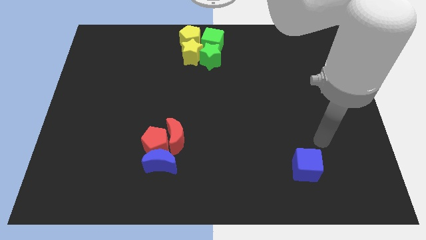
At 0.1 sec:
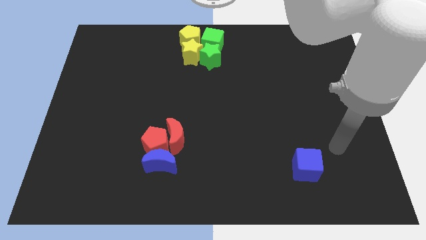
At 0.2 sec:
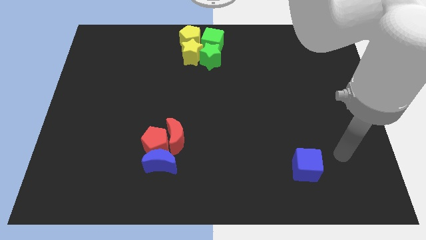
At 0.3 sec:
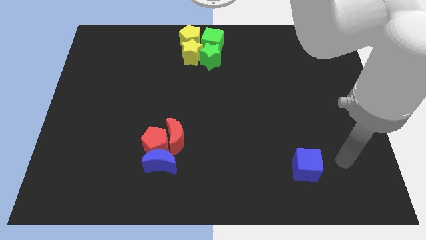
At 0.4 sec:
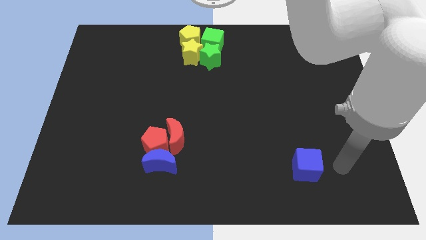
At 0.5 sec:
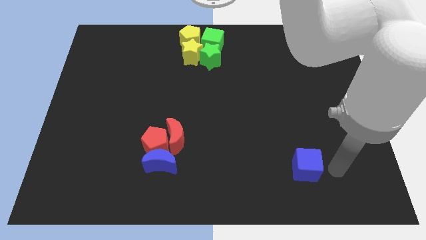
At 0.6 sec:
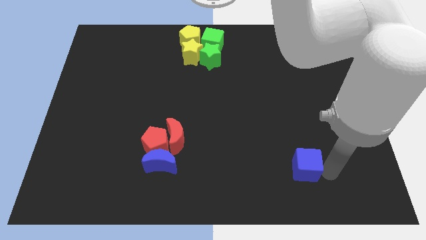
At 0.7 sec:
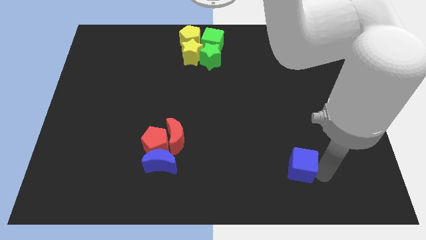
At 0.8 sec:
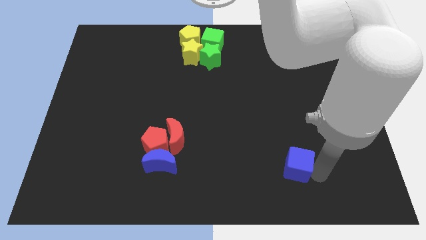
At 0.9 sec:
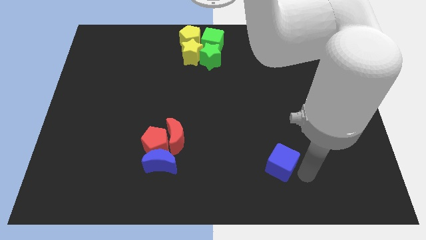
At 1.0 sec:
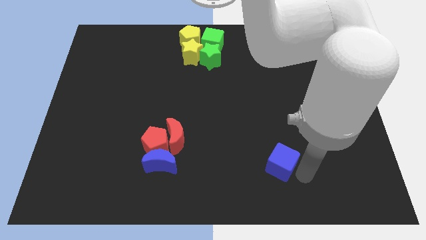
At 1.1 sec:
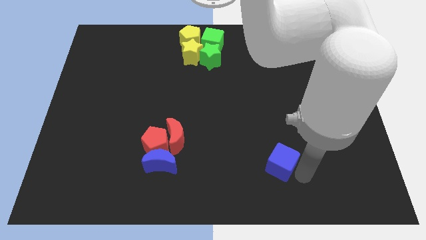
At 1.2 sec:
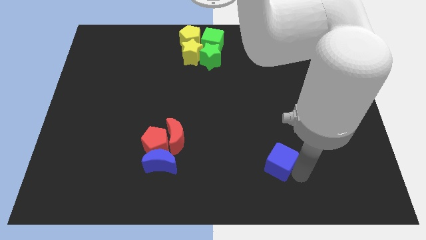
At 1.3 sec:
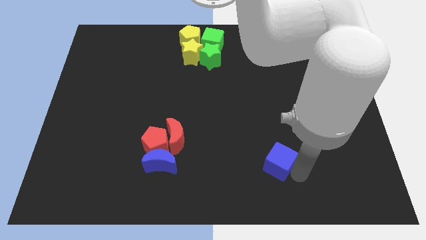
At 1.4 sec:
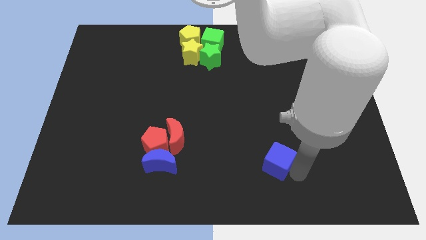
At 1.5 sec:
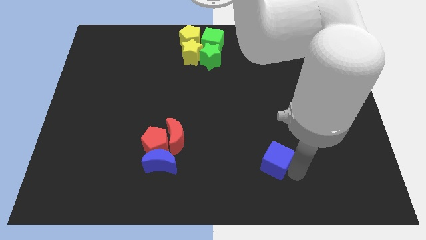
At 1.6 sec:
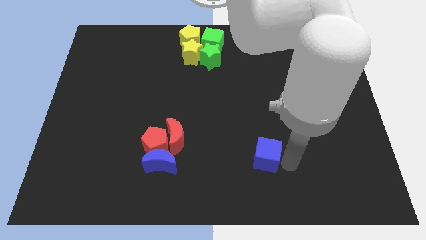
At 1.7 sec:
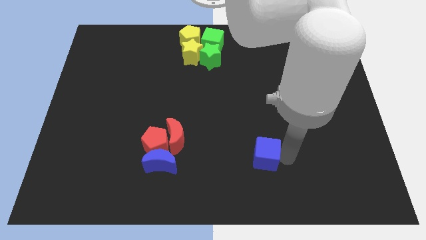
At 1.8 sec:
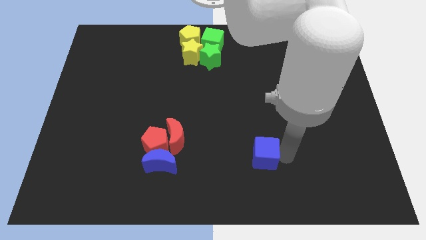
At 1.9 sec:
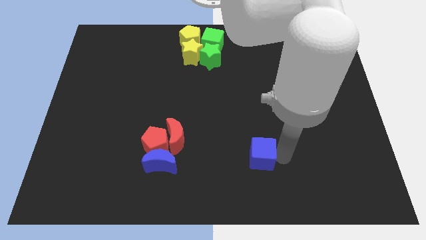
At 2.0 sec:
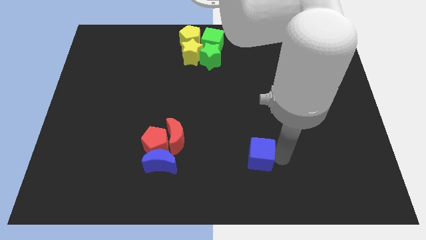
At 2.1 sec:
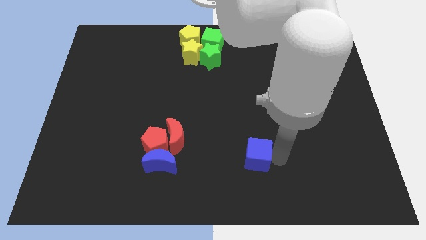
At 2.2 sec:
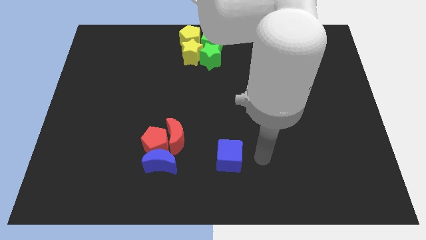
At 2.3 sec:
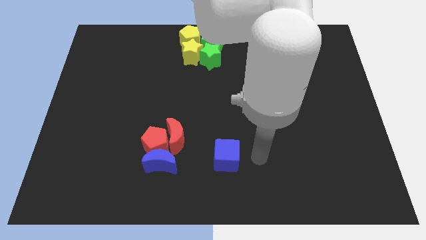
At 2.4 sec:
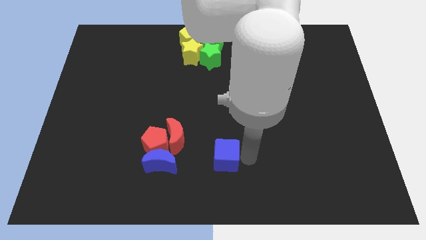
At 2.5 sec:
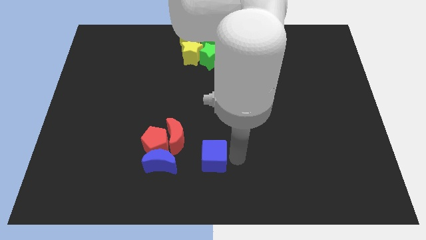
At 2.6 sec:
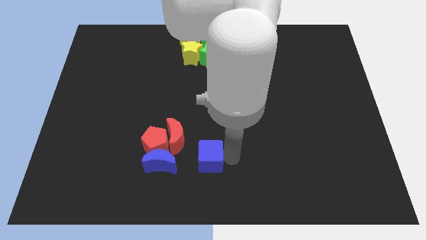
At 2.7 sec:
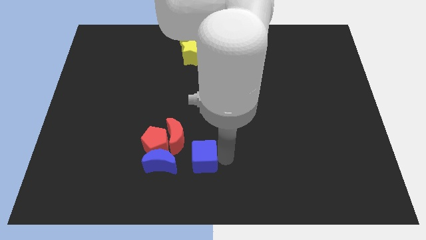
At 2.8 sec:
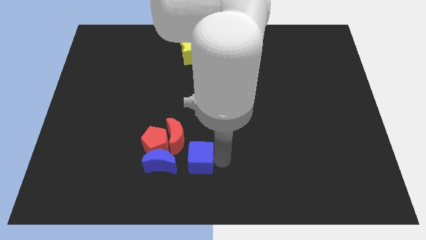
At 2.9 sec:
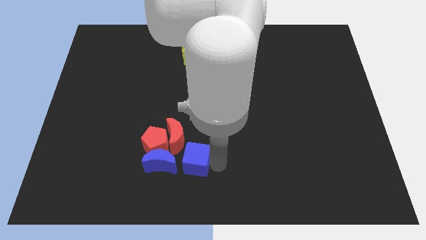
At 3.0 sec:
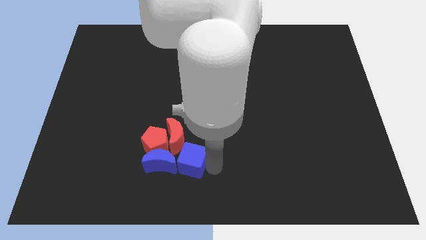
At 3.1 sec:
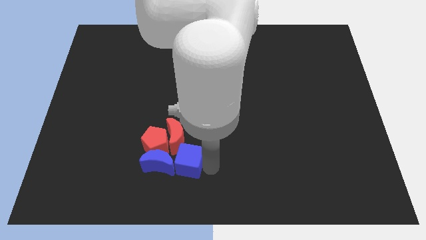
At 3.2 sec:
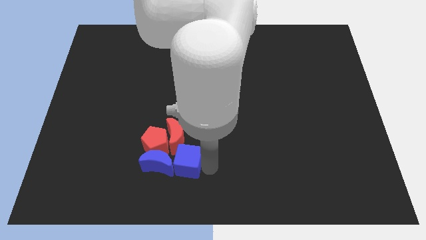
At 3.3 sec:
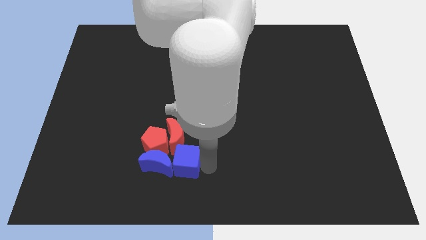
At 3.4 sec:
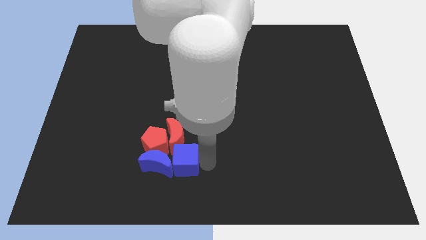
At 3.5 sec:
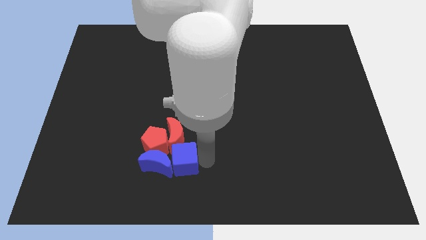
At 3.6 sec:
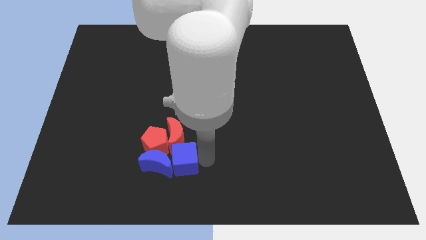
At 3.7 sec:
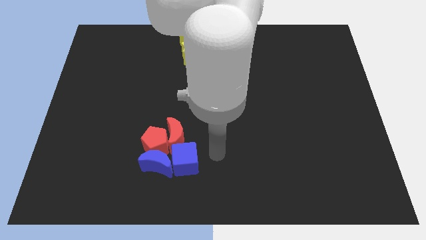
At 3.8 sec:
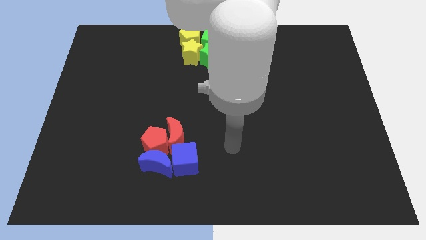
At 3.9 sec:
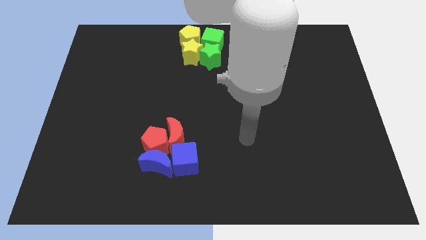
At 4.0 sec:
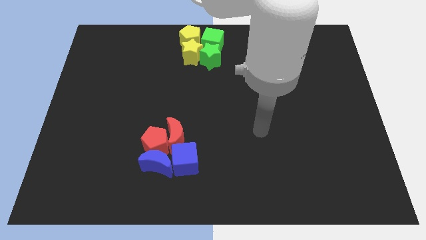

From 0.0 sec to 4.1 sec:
move blue cube into blue crescent

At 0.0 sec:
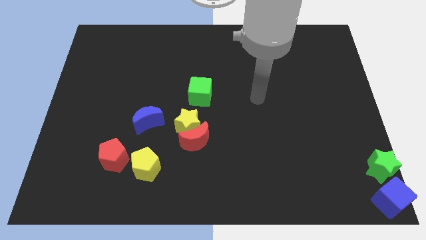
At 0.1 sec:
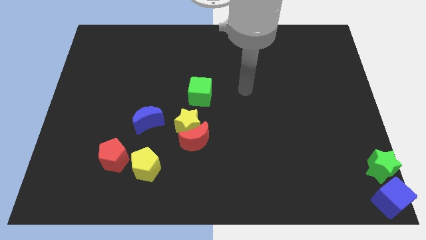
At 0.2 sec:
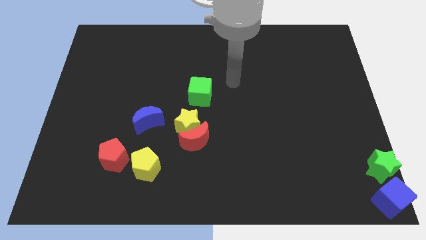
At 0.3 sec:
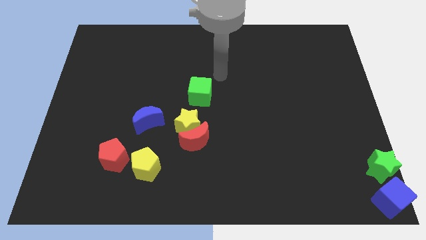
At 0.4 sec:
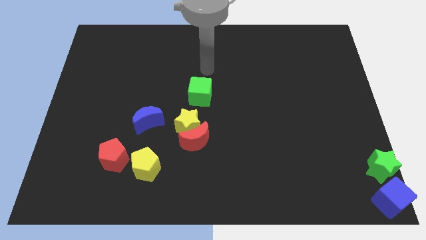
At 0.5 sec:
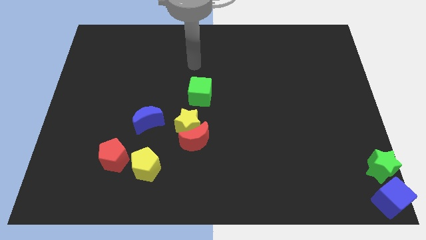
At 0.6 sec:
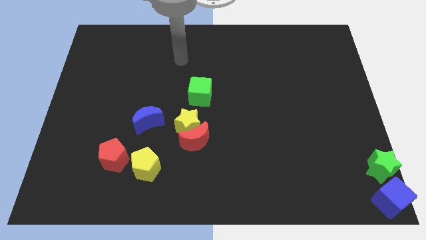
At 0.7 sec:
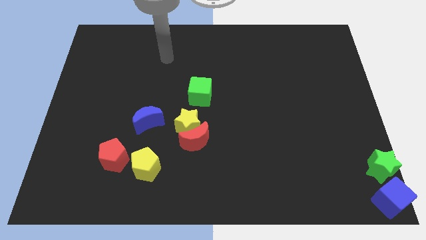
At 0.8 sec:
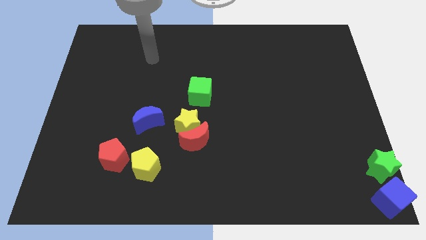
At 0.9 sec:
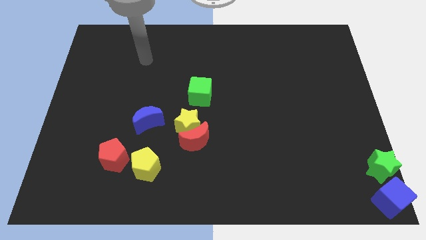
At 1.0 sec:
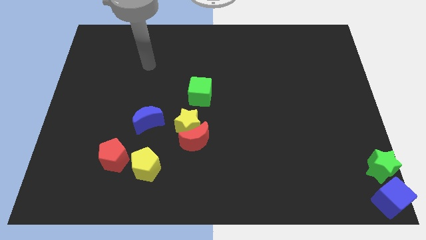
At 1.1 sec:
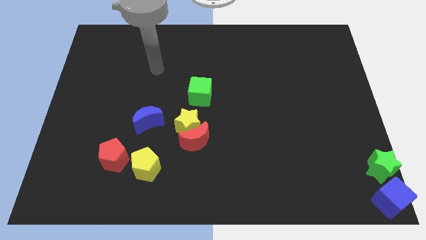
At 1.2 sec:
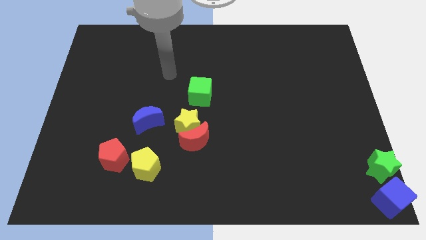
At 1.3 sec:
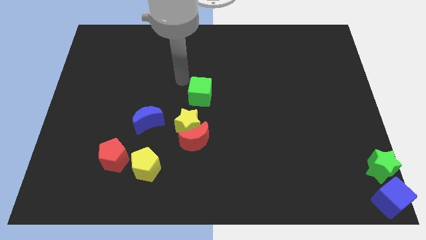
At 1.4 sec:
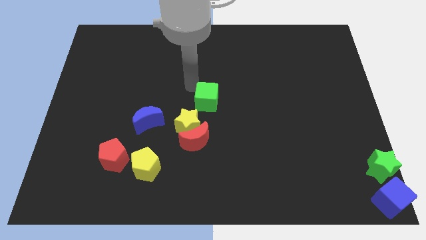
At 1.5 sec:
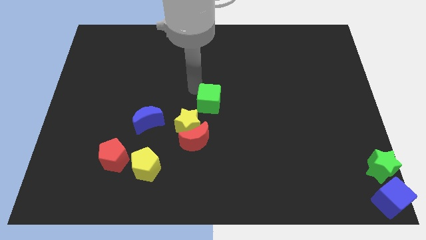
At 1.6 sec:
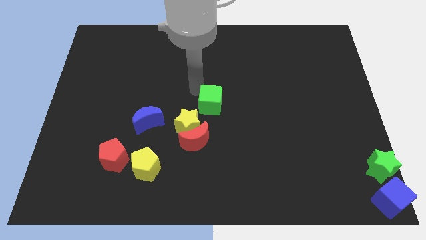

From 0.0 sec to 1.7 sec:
push the green cube

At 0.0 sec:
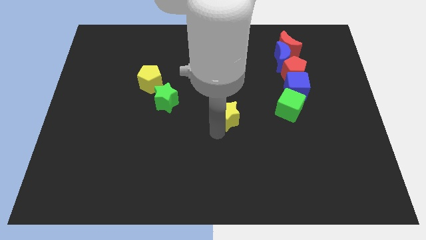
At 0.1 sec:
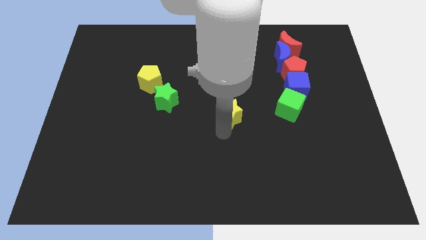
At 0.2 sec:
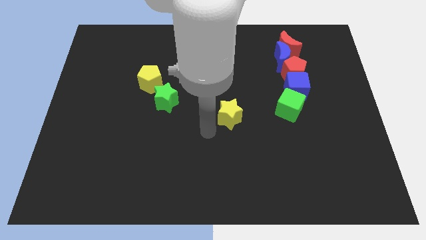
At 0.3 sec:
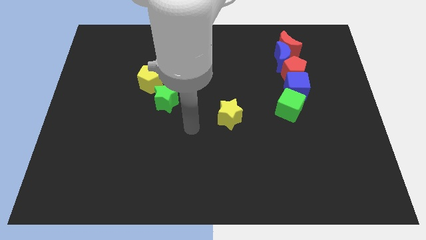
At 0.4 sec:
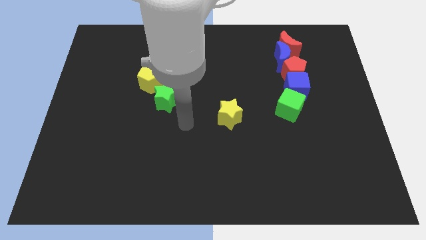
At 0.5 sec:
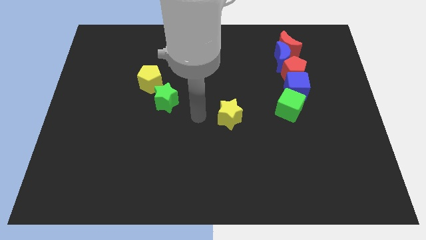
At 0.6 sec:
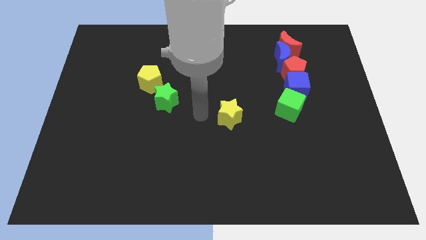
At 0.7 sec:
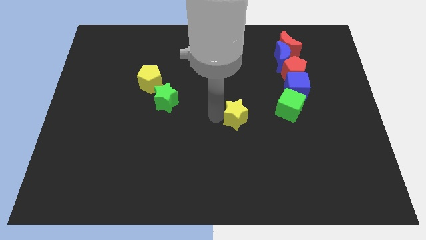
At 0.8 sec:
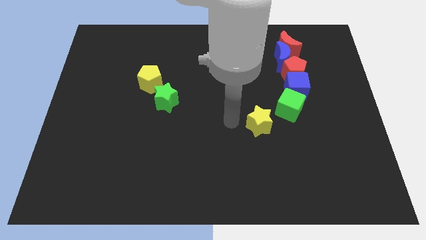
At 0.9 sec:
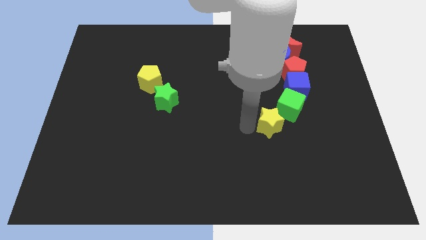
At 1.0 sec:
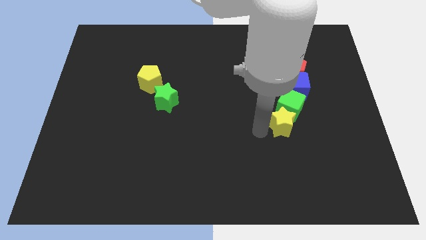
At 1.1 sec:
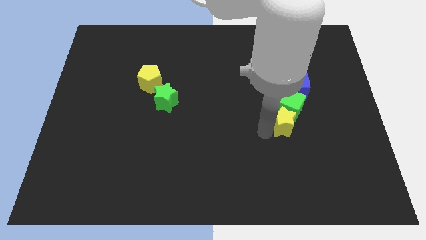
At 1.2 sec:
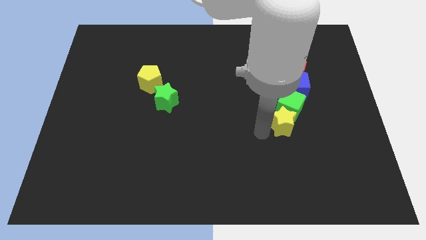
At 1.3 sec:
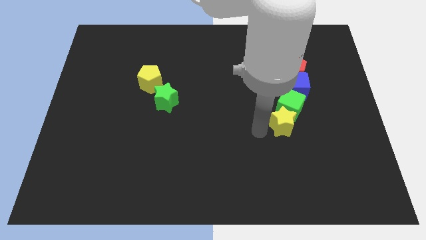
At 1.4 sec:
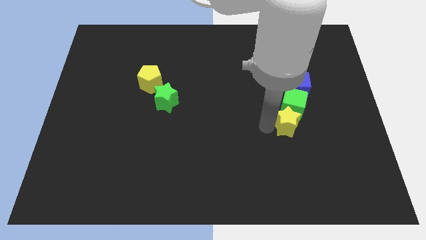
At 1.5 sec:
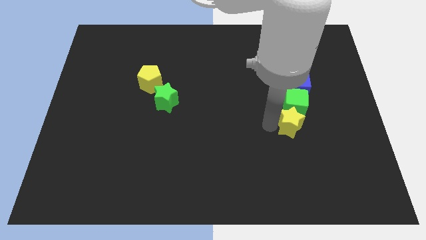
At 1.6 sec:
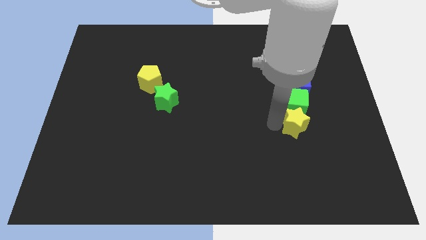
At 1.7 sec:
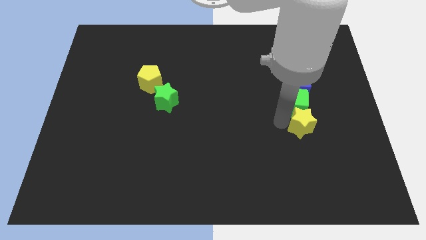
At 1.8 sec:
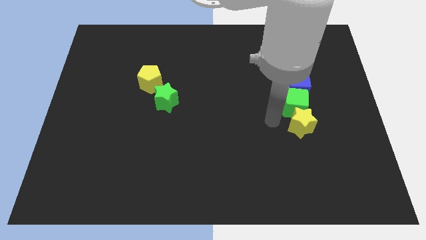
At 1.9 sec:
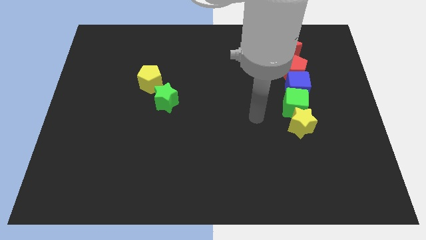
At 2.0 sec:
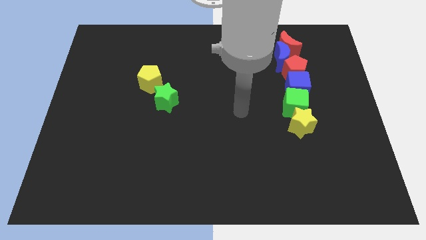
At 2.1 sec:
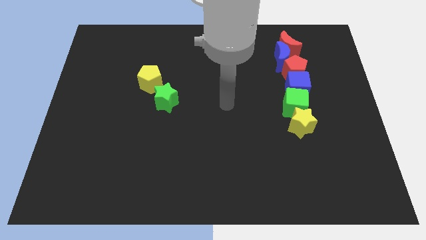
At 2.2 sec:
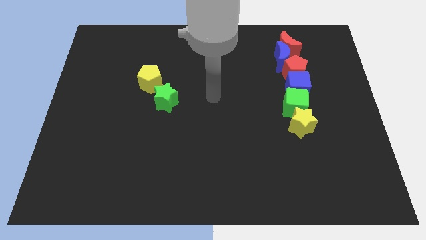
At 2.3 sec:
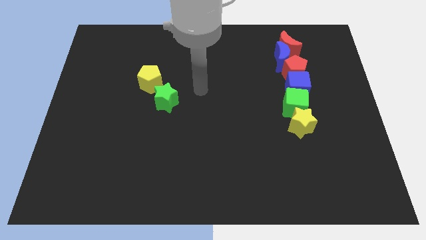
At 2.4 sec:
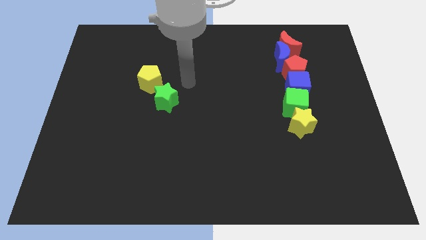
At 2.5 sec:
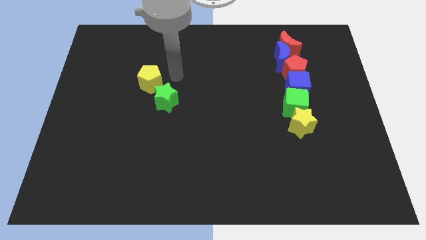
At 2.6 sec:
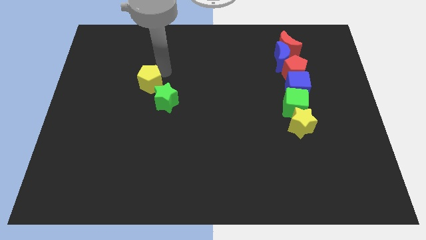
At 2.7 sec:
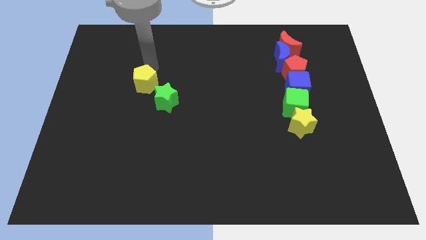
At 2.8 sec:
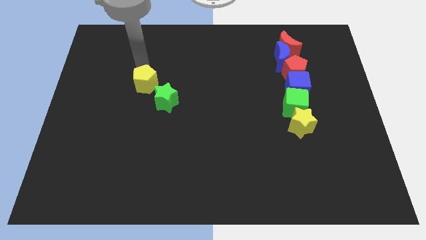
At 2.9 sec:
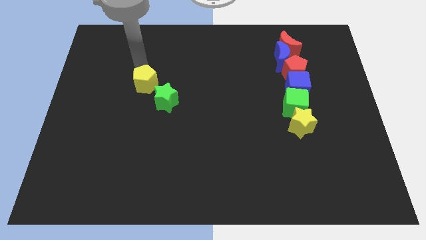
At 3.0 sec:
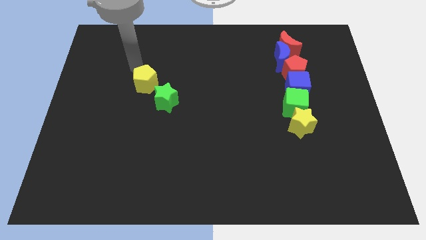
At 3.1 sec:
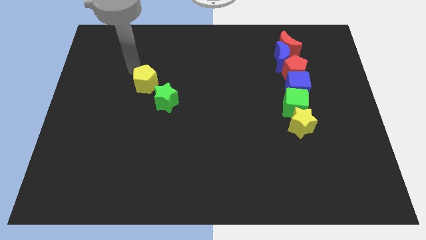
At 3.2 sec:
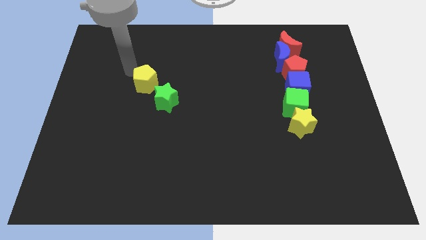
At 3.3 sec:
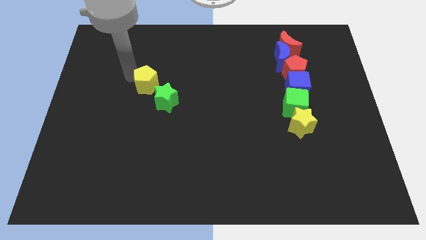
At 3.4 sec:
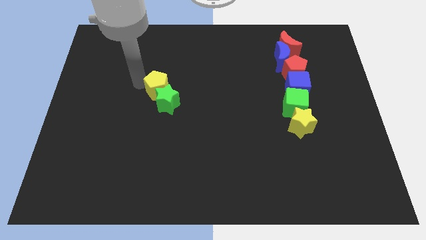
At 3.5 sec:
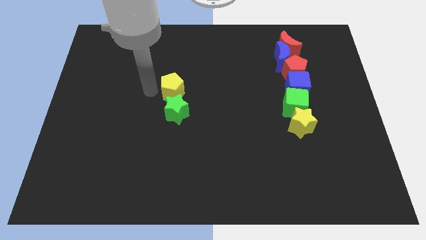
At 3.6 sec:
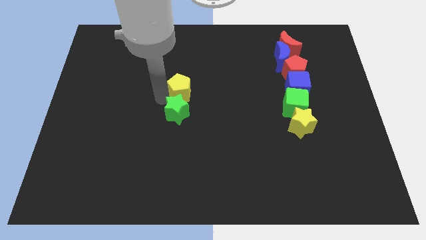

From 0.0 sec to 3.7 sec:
move the arm above the yellow pentagon
